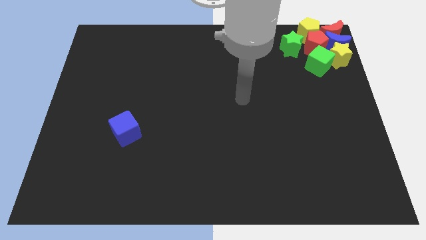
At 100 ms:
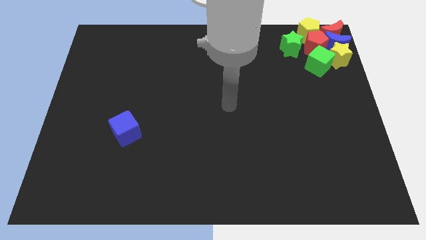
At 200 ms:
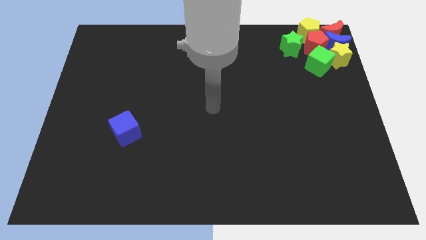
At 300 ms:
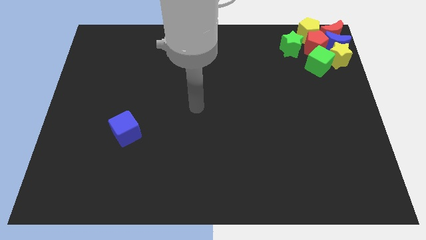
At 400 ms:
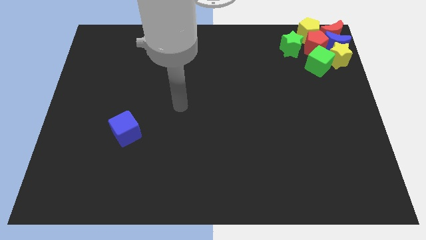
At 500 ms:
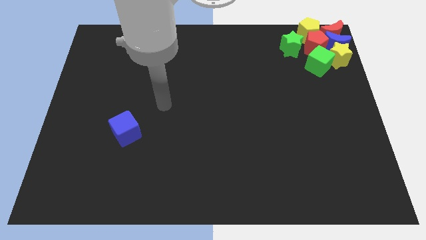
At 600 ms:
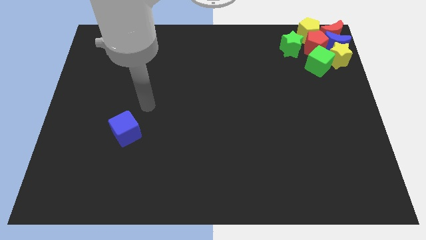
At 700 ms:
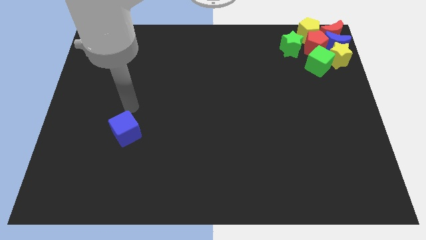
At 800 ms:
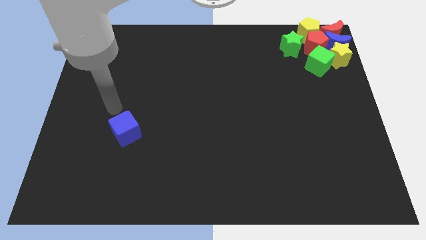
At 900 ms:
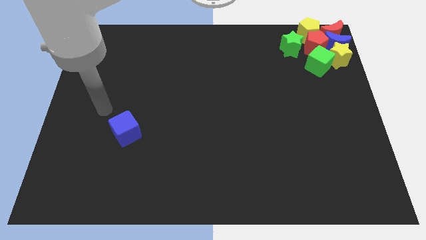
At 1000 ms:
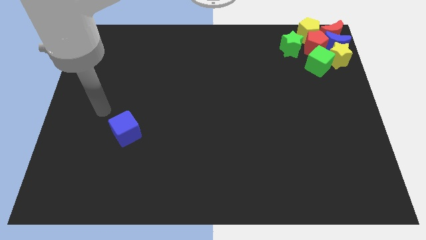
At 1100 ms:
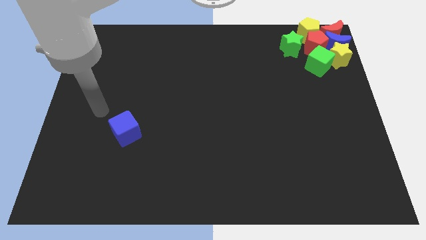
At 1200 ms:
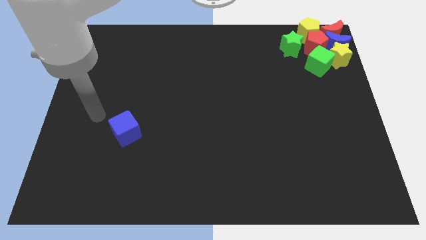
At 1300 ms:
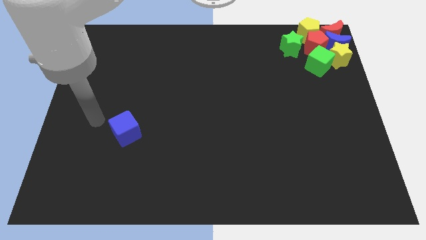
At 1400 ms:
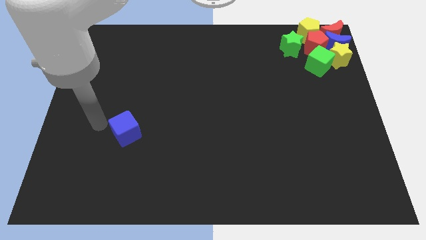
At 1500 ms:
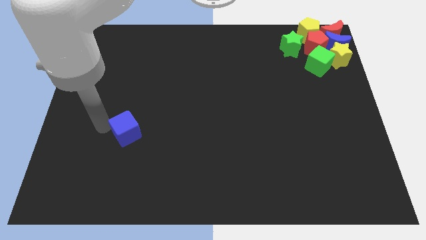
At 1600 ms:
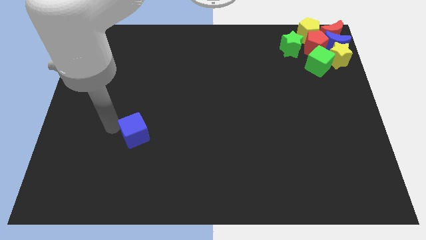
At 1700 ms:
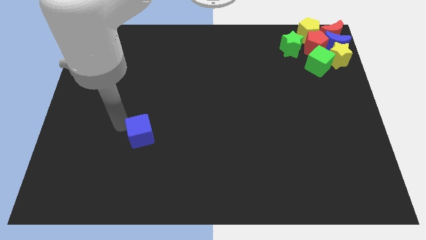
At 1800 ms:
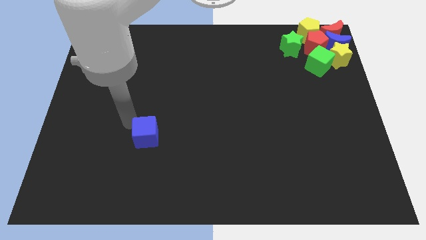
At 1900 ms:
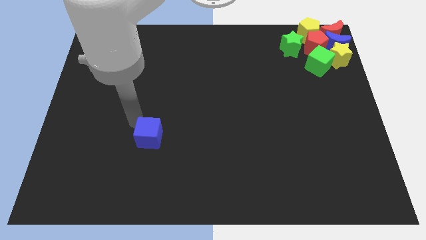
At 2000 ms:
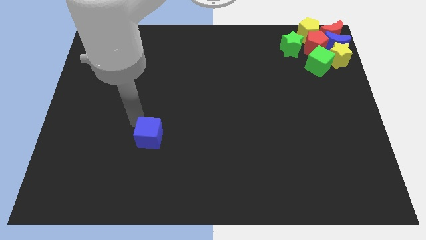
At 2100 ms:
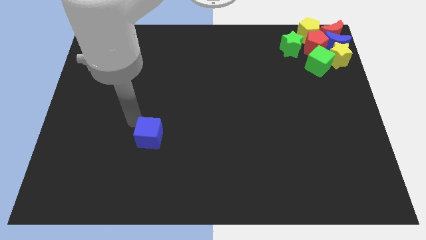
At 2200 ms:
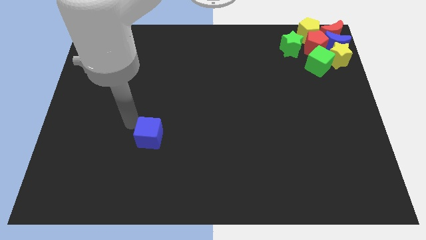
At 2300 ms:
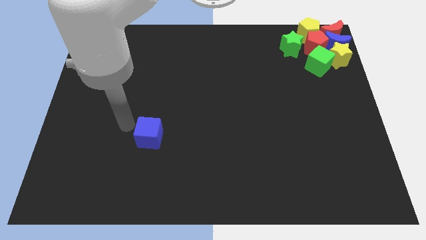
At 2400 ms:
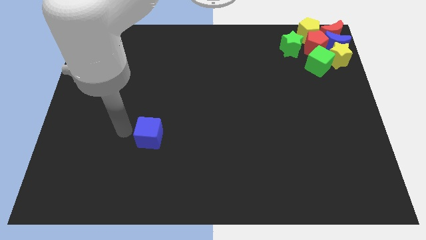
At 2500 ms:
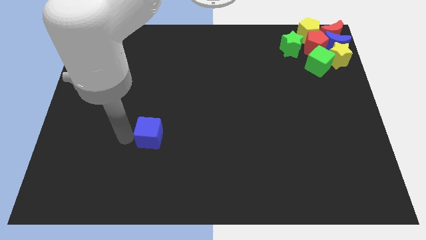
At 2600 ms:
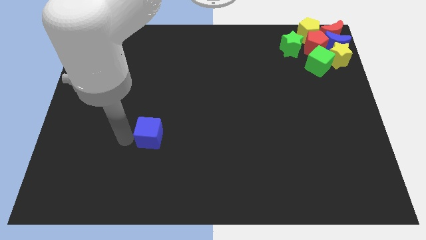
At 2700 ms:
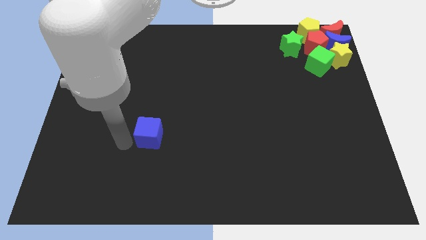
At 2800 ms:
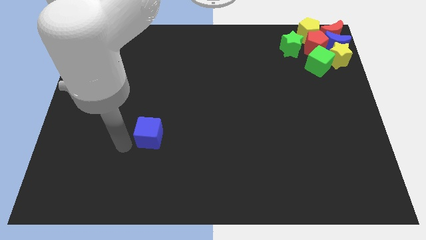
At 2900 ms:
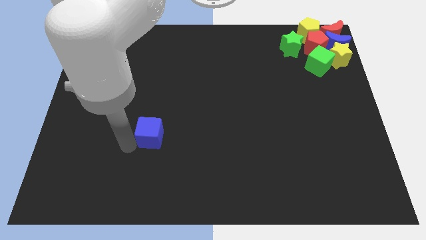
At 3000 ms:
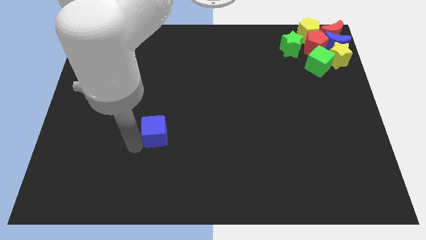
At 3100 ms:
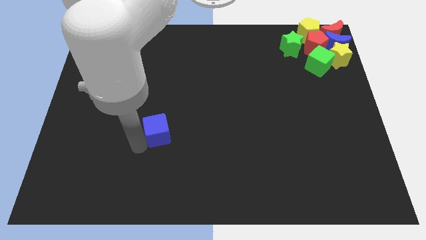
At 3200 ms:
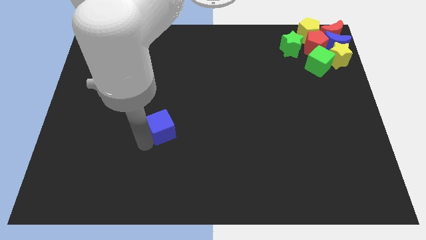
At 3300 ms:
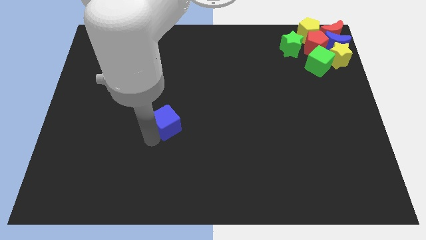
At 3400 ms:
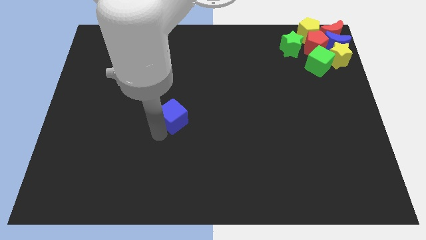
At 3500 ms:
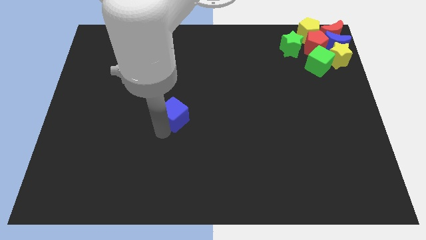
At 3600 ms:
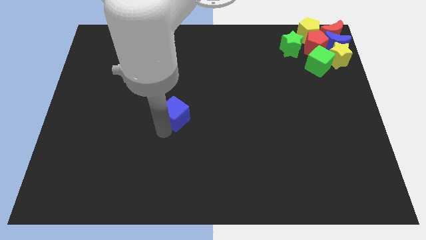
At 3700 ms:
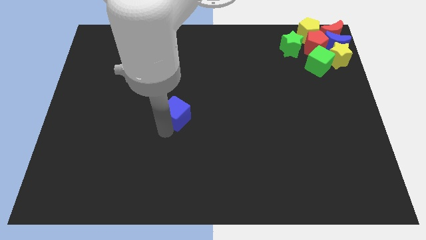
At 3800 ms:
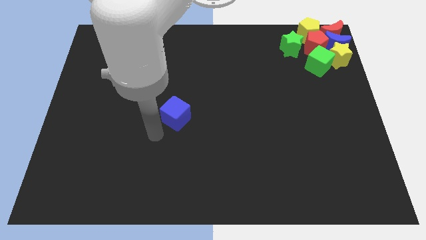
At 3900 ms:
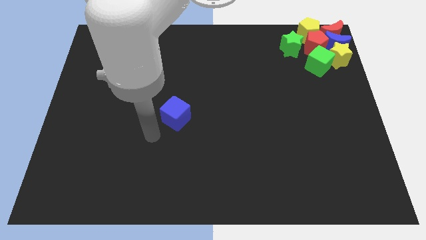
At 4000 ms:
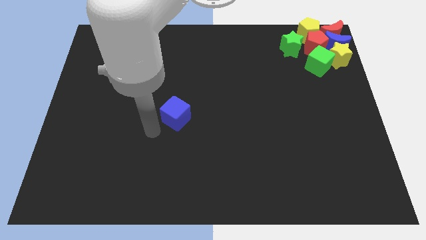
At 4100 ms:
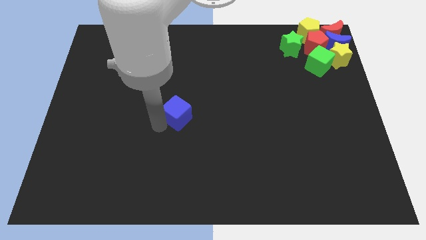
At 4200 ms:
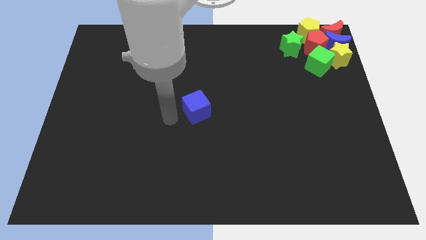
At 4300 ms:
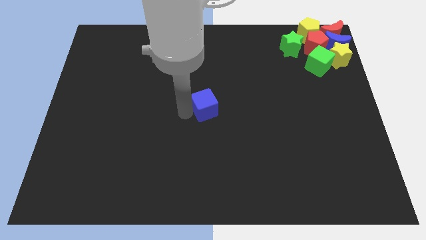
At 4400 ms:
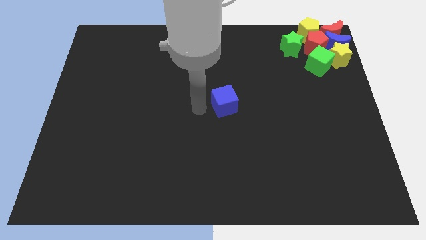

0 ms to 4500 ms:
push the blue cube to the center of the board

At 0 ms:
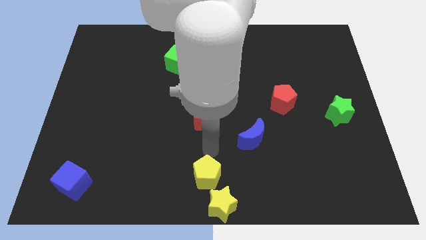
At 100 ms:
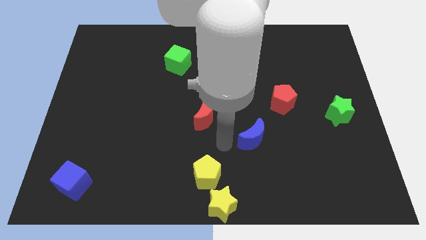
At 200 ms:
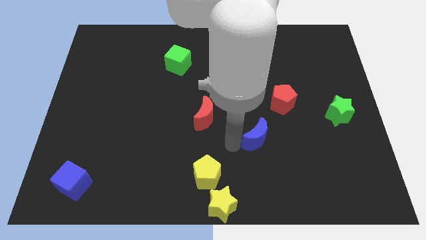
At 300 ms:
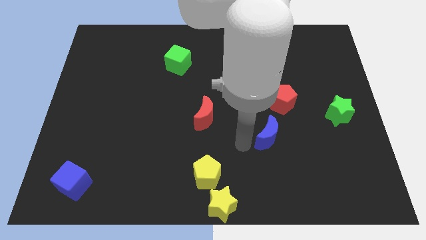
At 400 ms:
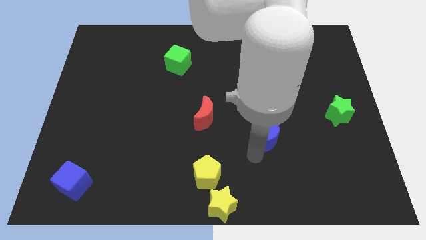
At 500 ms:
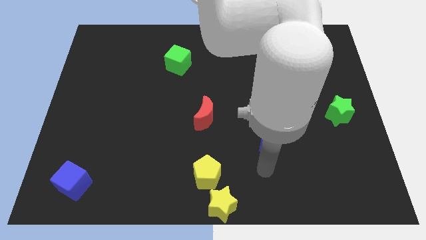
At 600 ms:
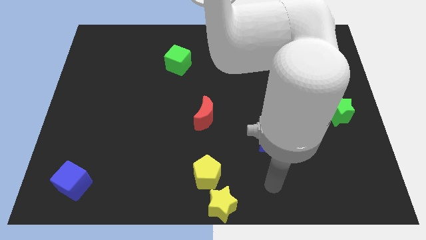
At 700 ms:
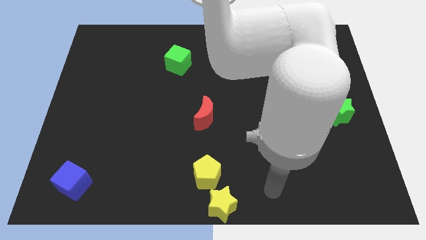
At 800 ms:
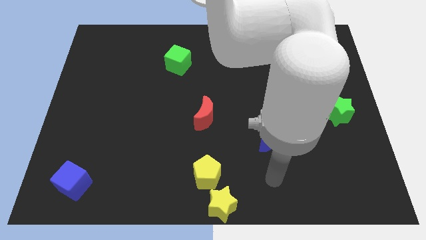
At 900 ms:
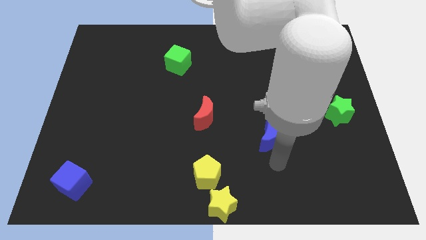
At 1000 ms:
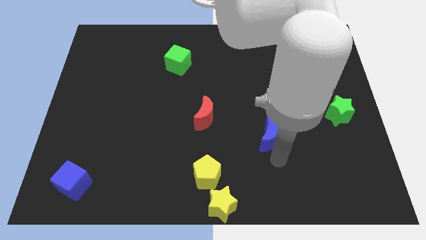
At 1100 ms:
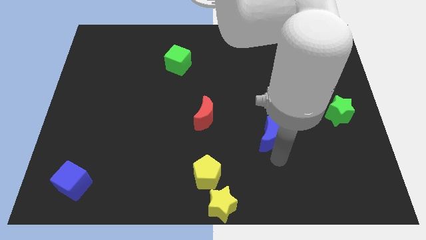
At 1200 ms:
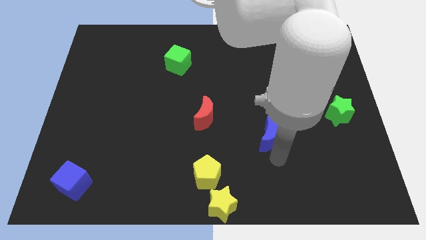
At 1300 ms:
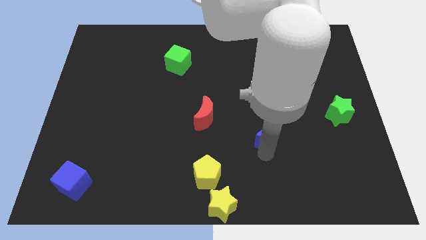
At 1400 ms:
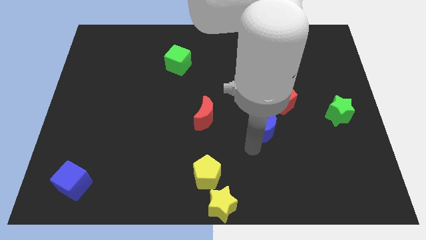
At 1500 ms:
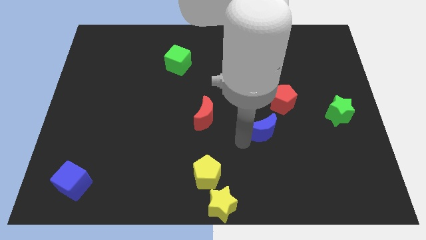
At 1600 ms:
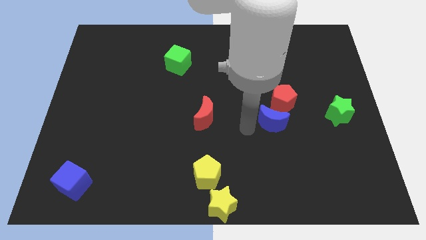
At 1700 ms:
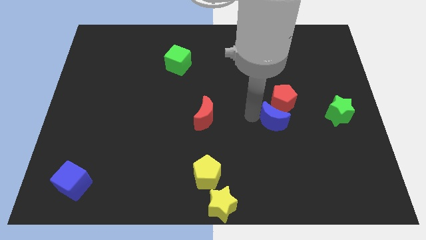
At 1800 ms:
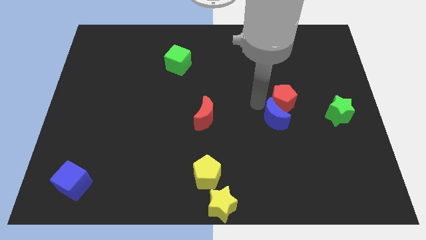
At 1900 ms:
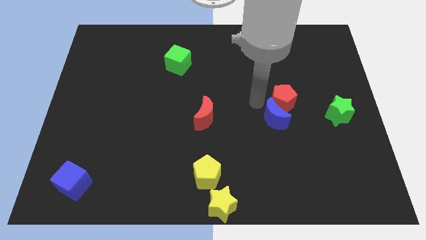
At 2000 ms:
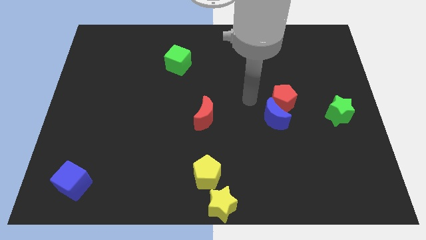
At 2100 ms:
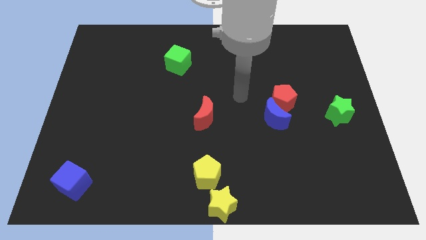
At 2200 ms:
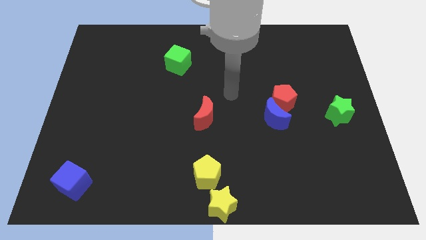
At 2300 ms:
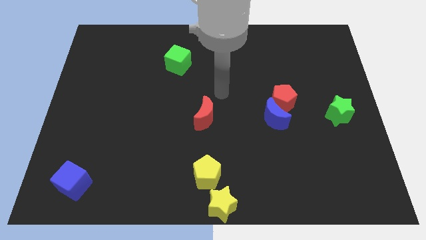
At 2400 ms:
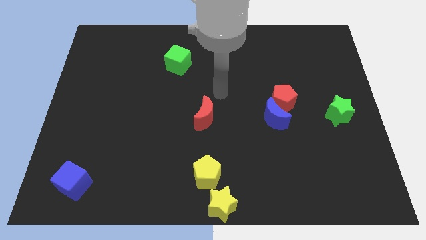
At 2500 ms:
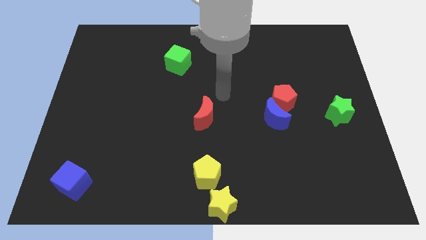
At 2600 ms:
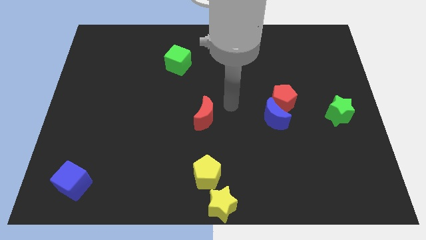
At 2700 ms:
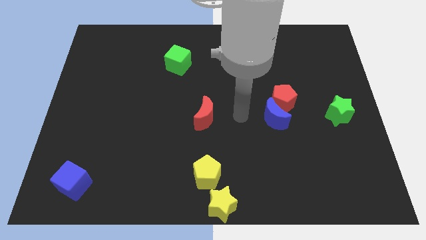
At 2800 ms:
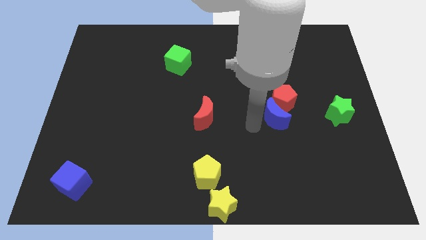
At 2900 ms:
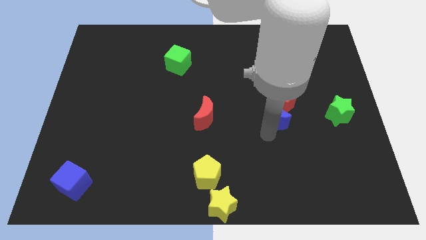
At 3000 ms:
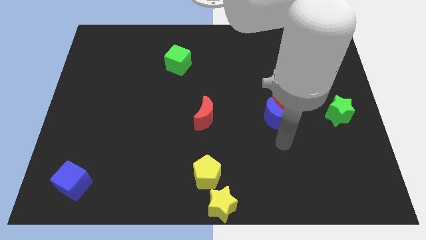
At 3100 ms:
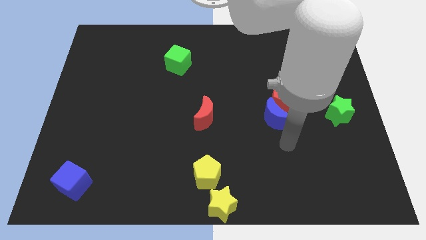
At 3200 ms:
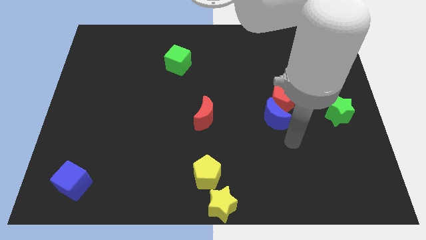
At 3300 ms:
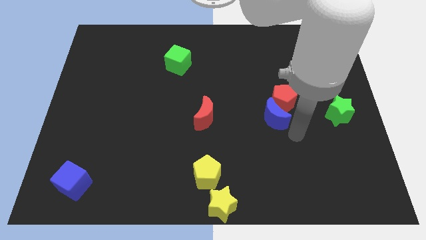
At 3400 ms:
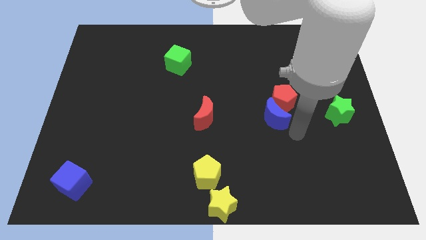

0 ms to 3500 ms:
push the blue moon to the bottom side of the red pentagon

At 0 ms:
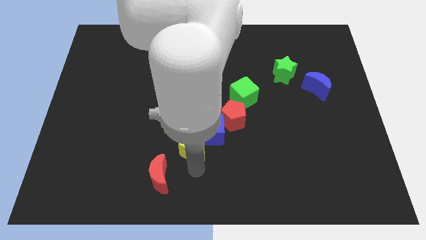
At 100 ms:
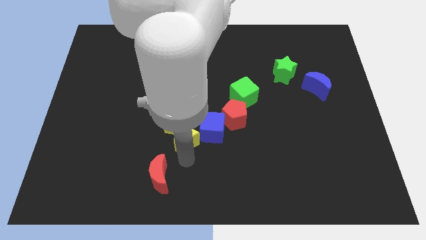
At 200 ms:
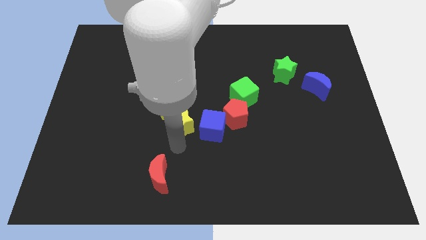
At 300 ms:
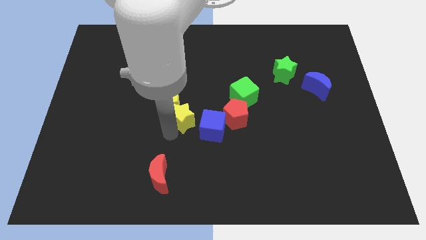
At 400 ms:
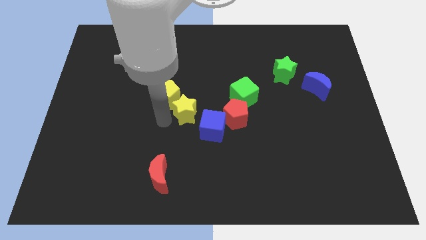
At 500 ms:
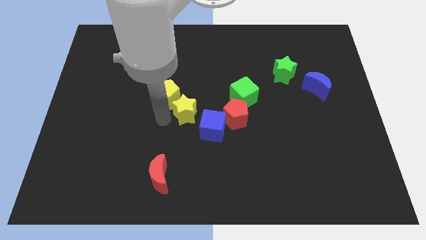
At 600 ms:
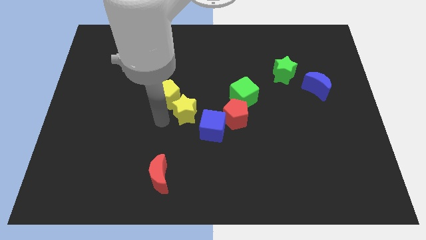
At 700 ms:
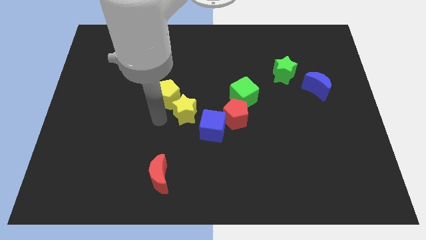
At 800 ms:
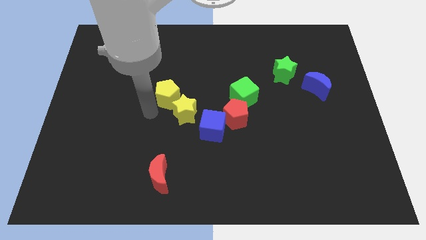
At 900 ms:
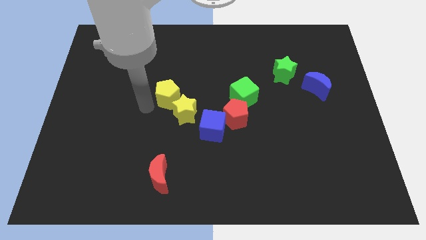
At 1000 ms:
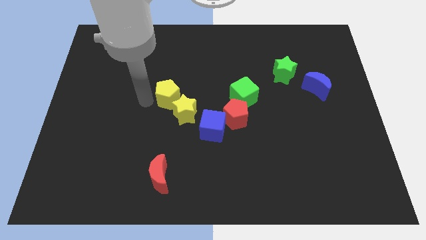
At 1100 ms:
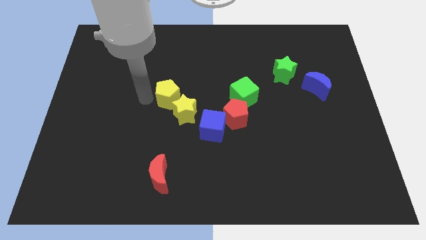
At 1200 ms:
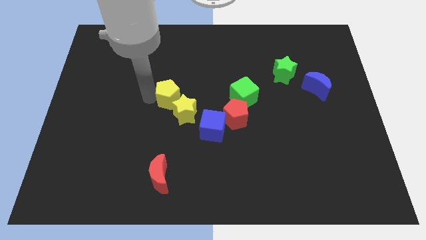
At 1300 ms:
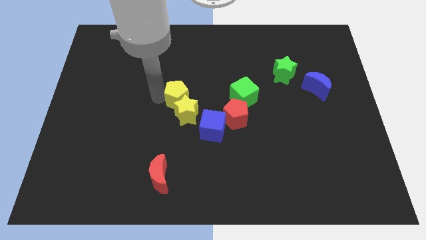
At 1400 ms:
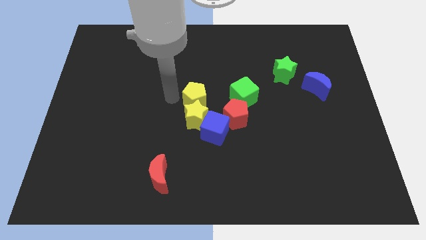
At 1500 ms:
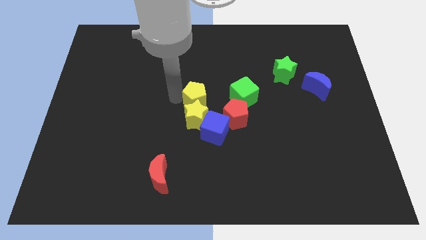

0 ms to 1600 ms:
push the yellow star into the yellow pentagon
